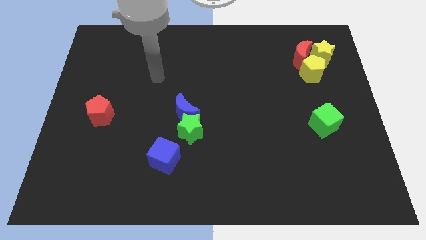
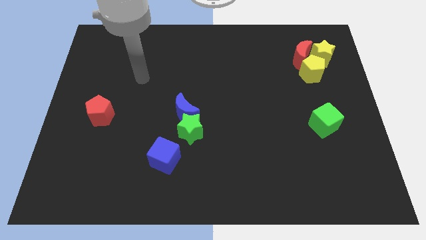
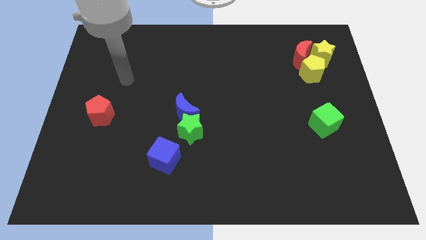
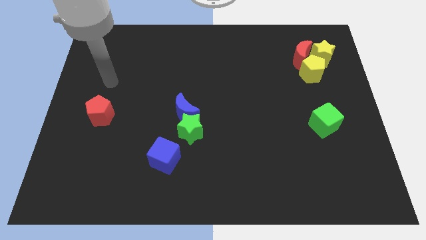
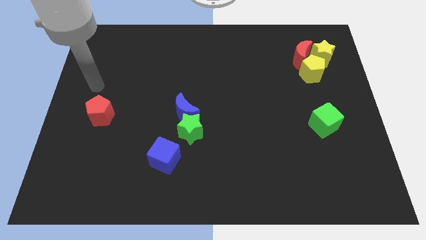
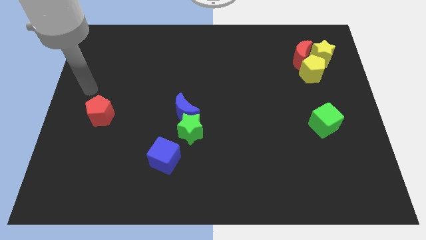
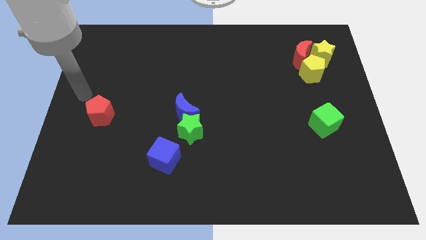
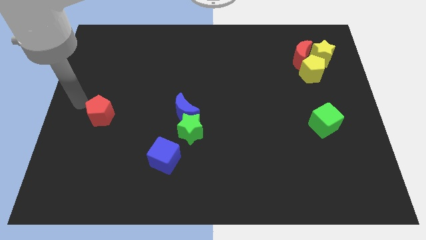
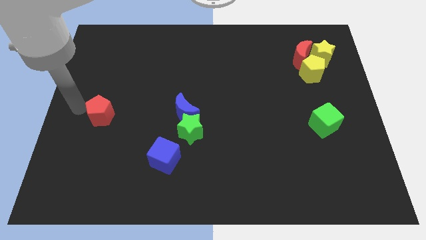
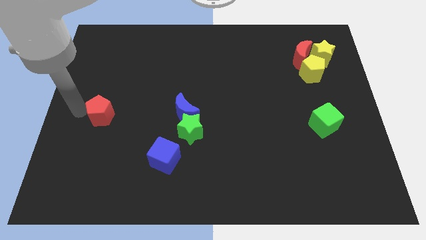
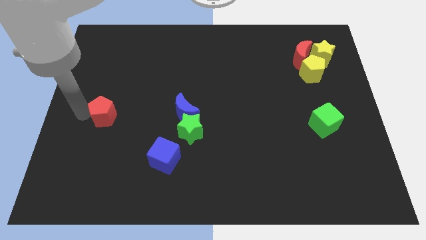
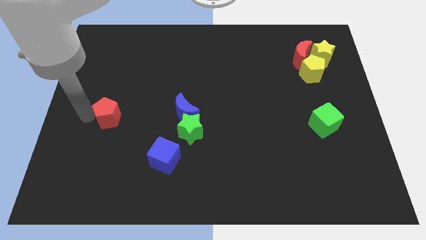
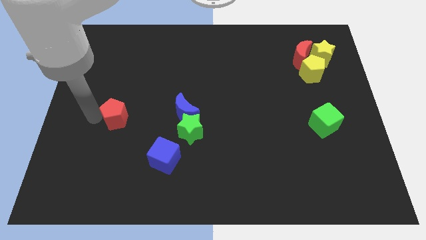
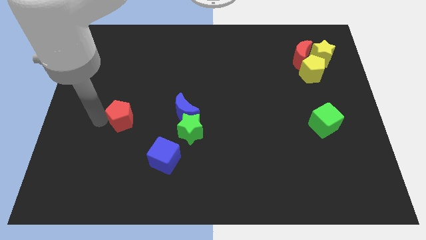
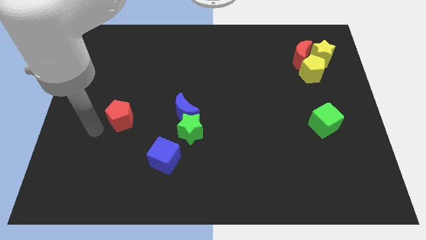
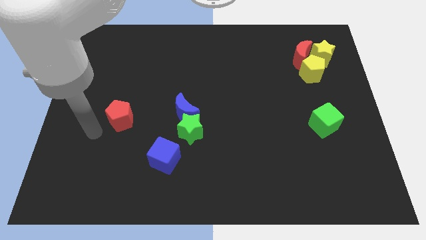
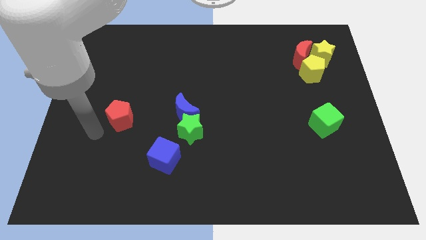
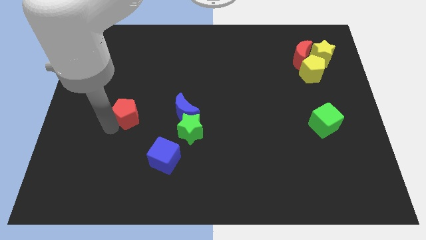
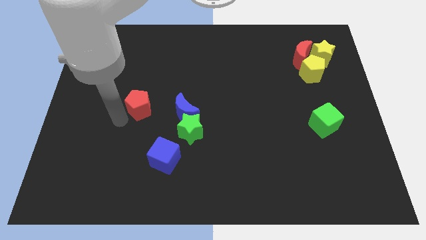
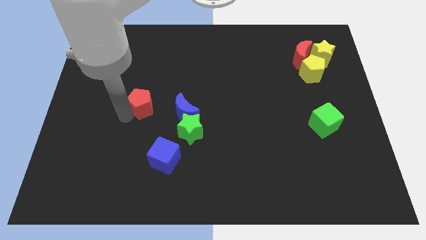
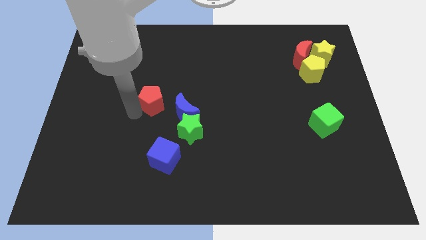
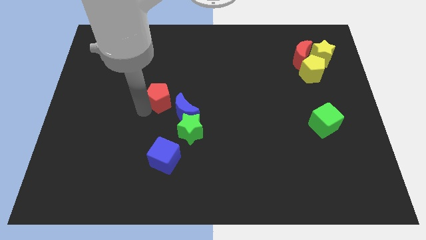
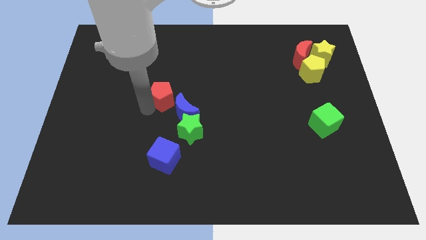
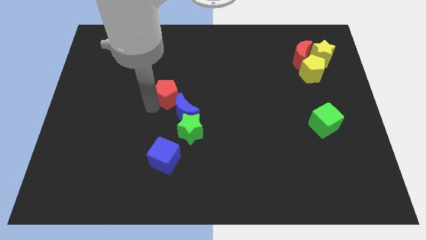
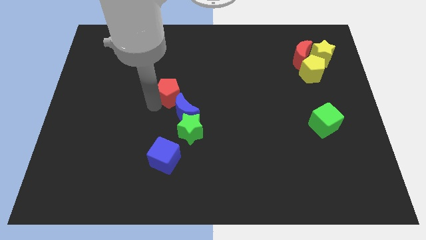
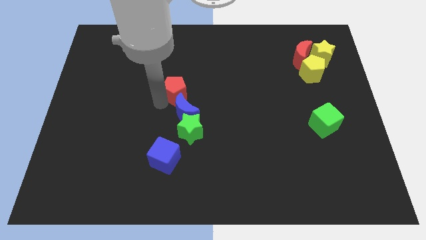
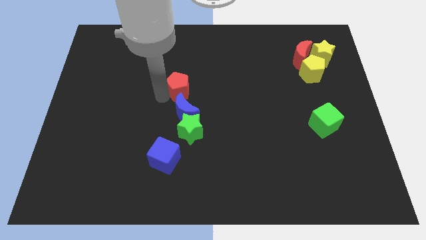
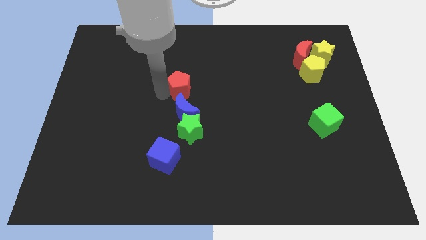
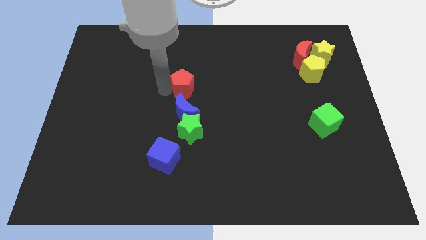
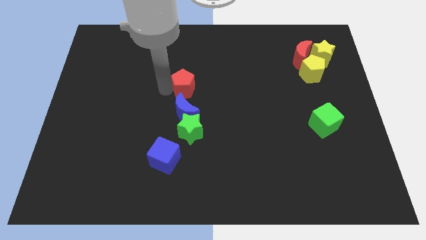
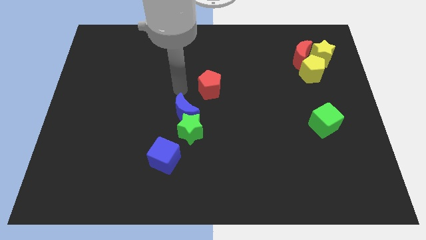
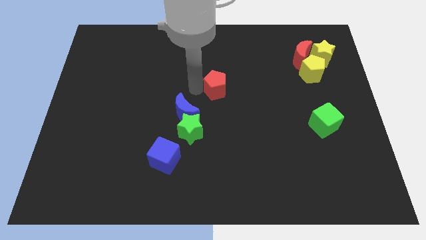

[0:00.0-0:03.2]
move the red pentagon to the center

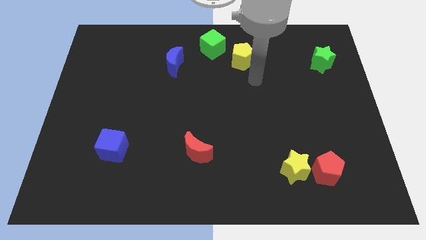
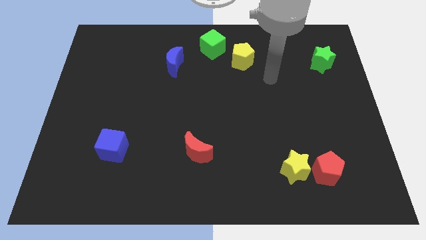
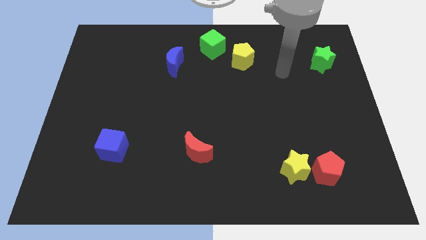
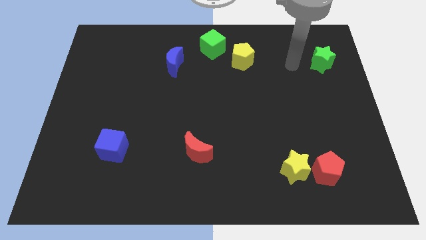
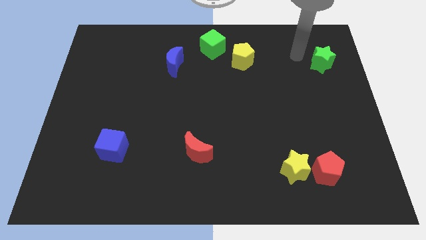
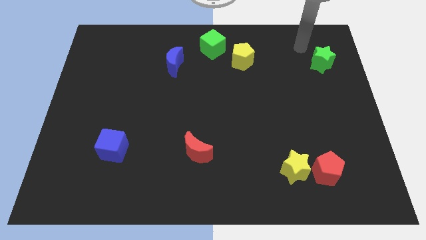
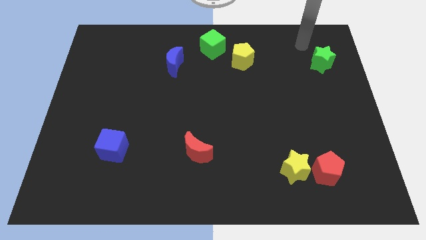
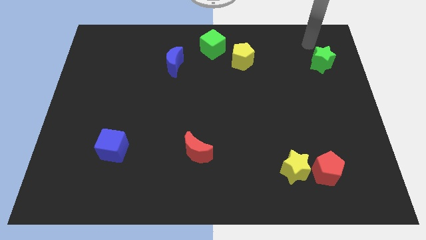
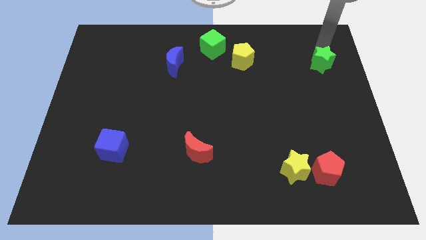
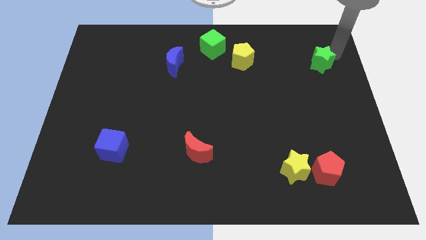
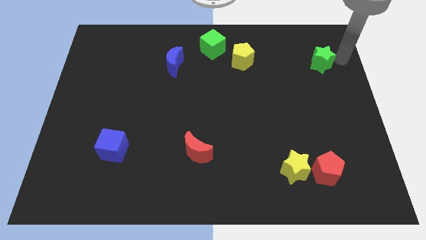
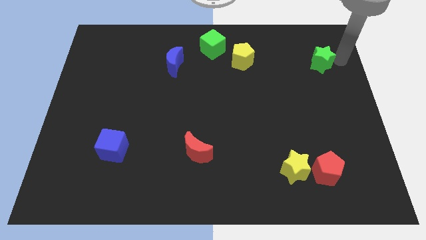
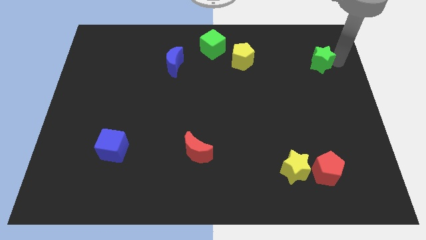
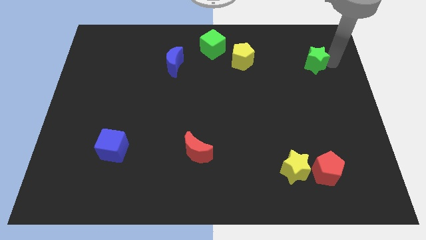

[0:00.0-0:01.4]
tap the green star

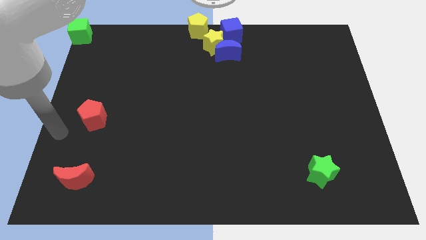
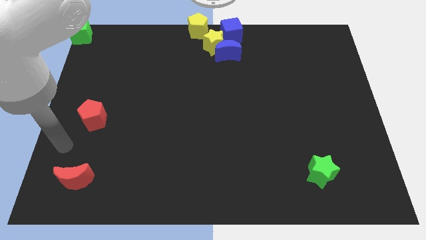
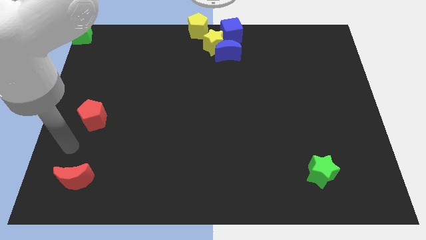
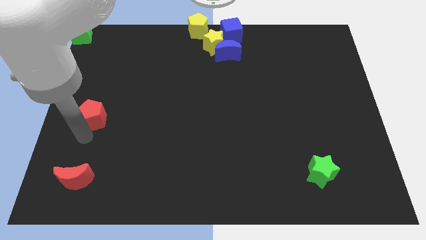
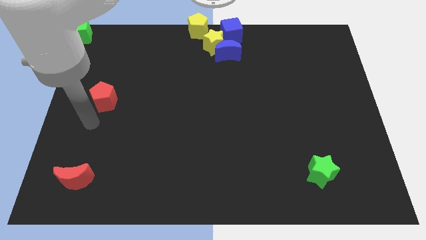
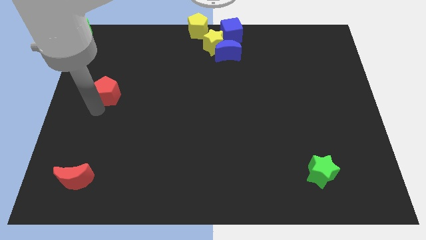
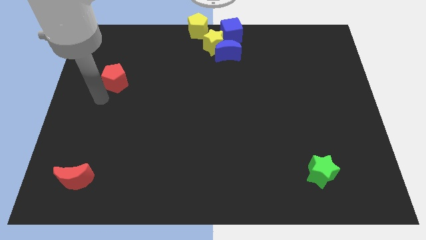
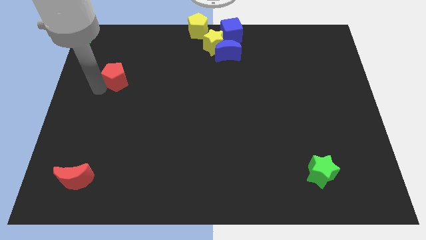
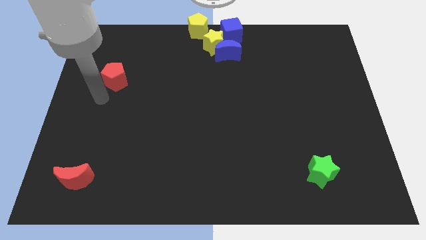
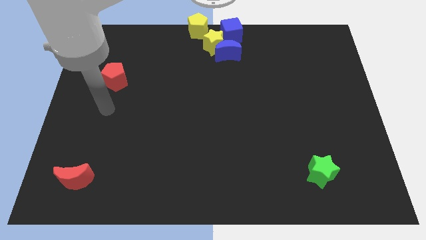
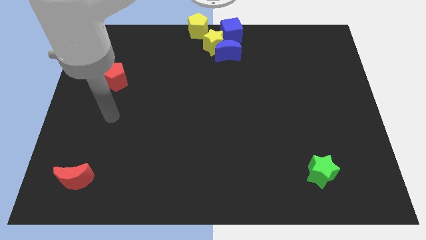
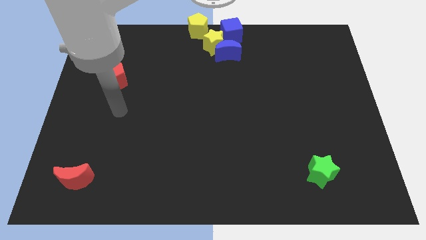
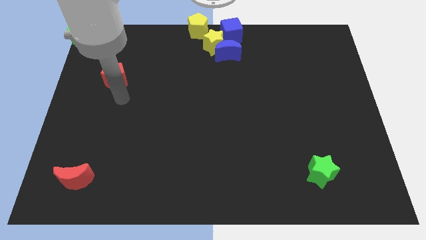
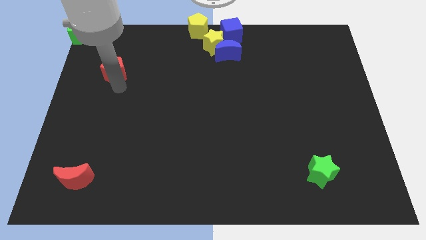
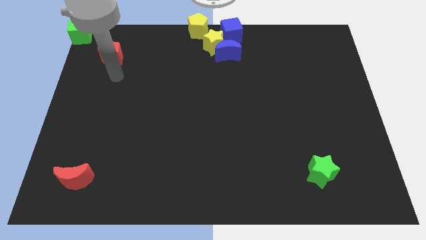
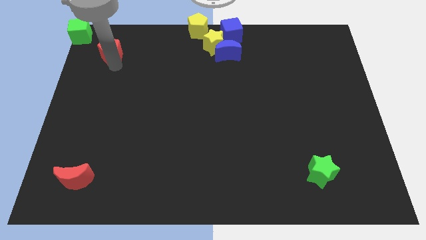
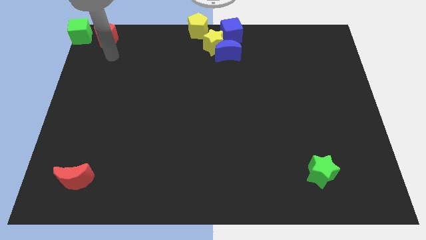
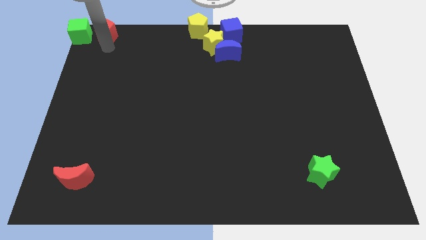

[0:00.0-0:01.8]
put the red pentagon close to the green cube

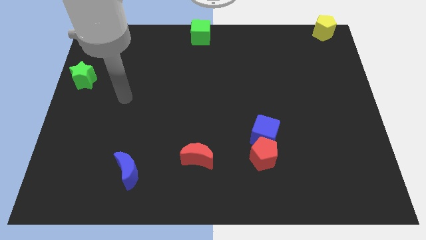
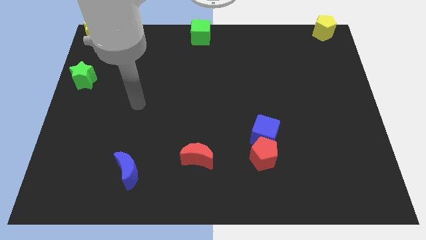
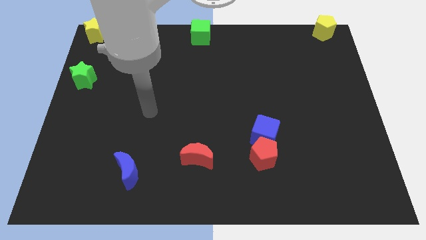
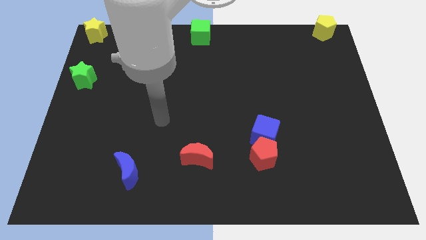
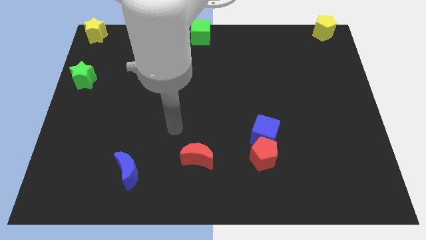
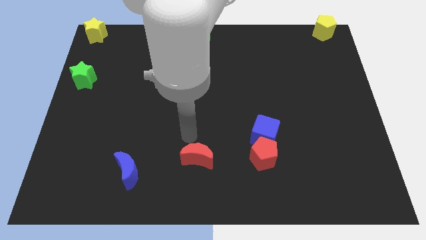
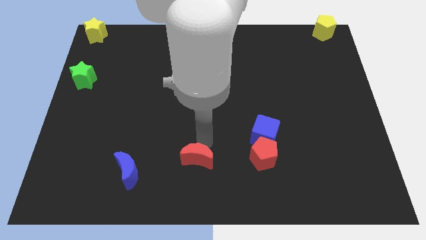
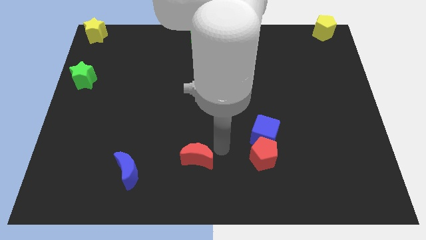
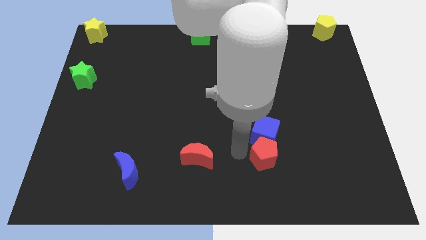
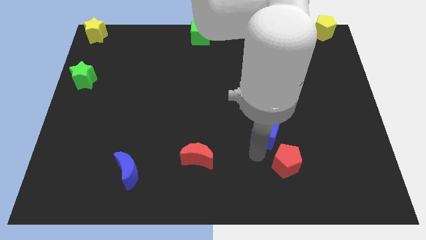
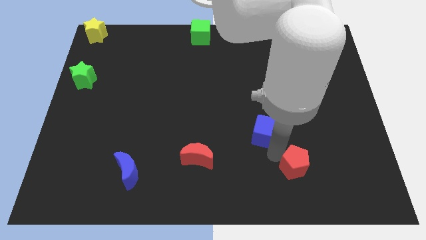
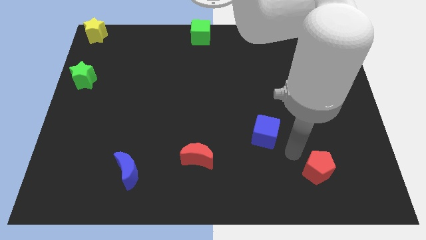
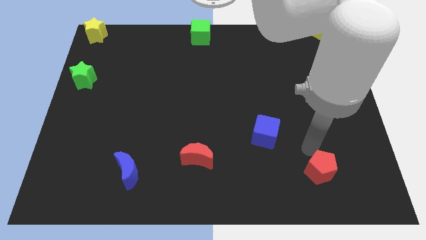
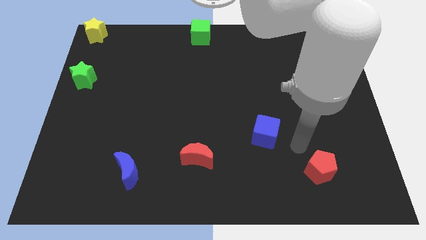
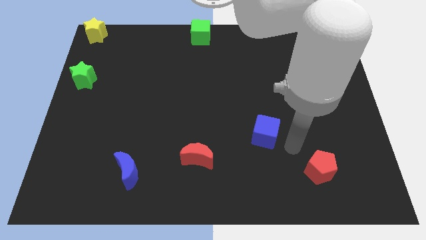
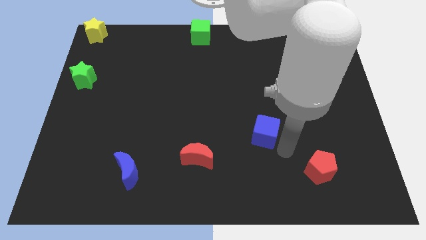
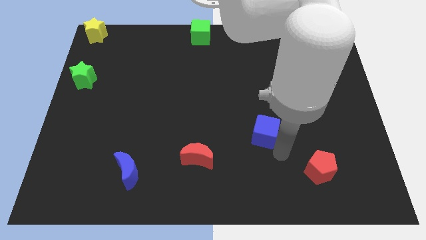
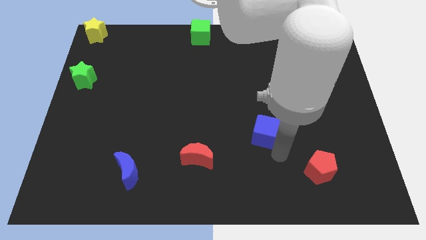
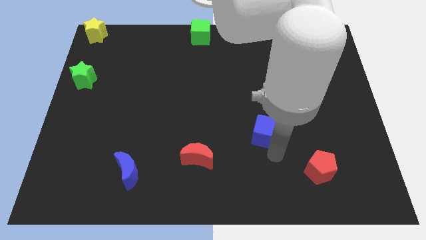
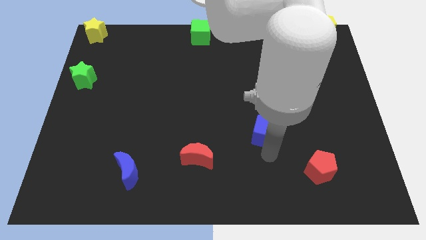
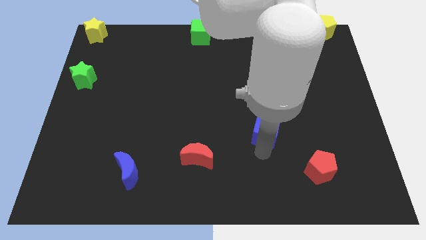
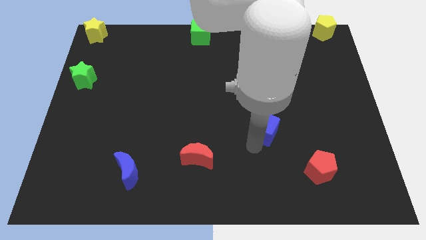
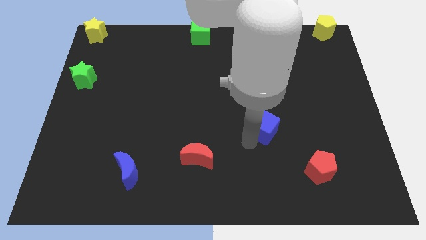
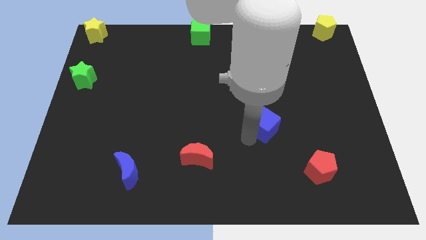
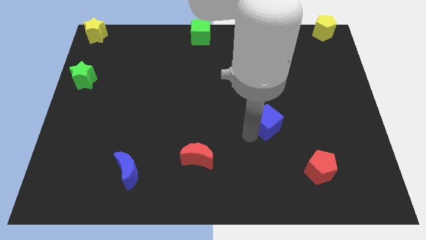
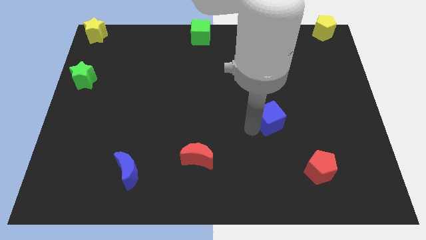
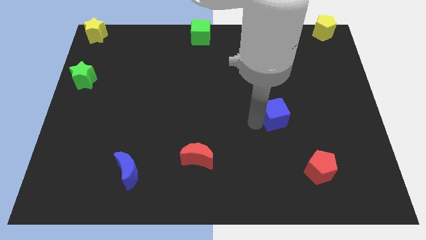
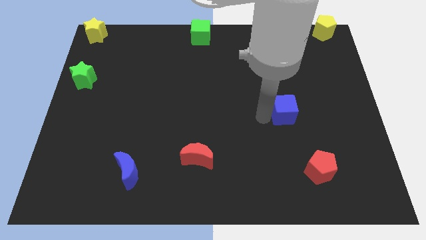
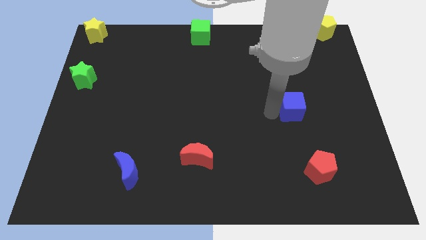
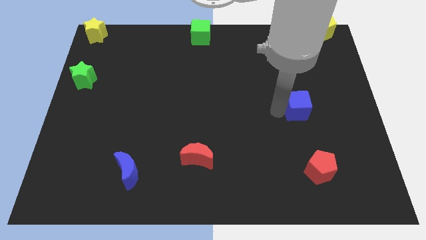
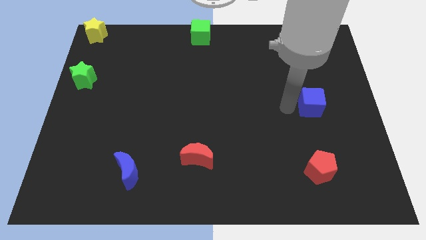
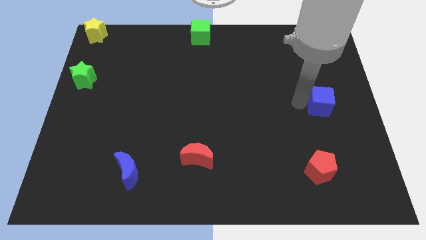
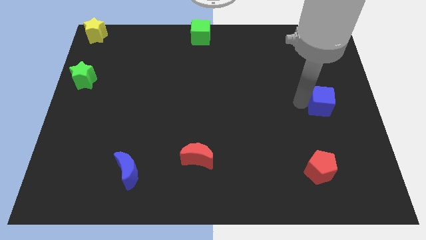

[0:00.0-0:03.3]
separate the red pentagon and blue cube from each others
